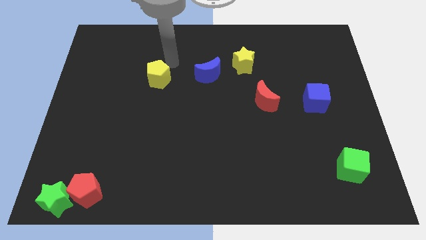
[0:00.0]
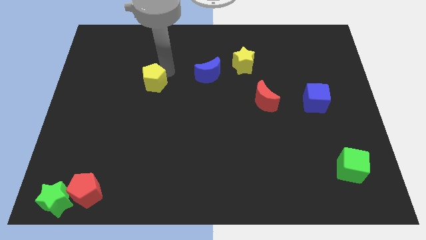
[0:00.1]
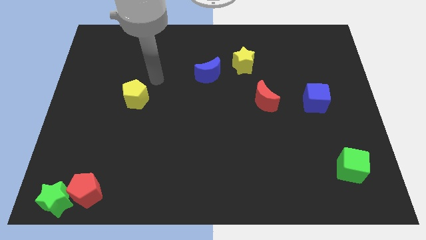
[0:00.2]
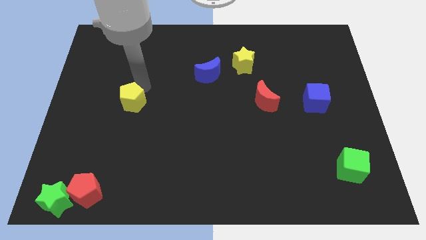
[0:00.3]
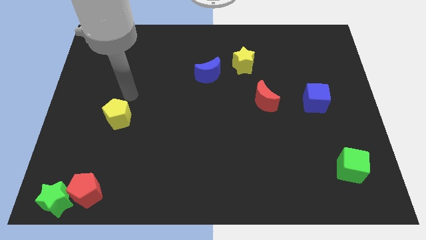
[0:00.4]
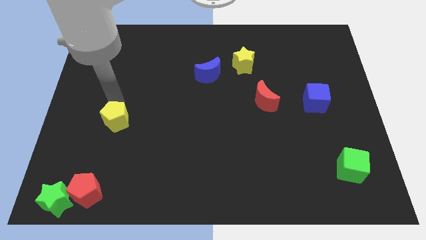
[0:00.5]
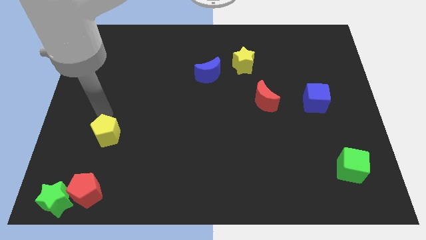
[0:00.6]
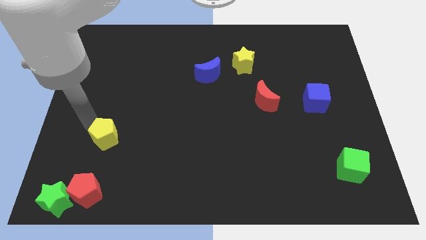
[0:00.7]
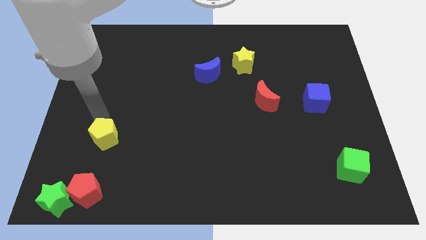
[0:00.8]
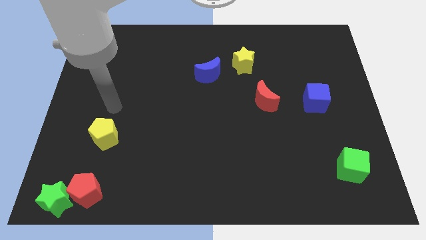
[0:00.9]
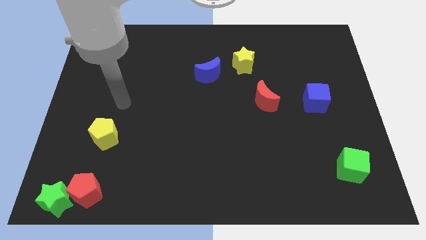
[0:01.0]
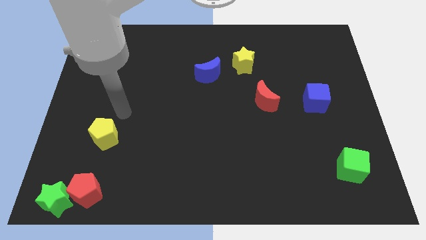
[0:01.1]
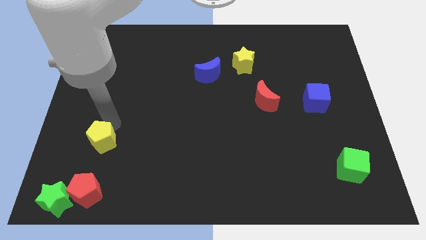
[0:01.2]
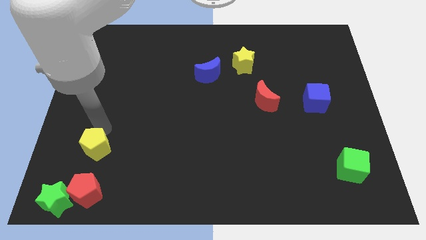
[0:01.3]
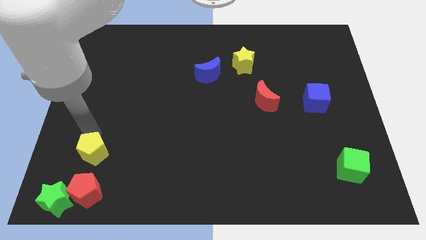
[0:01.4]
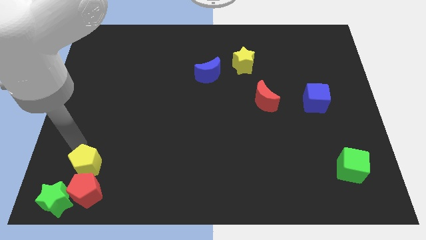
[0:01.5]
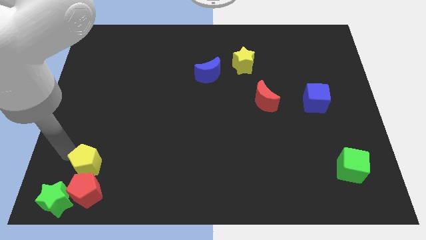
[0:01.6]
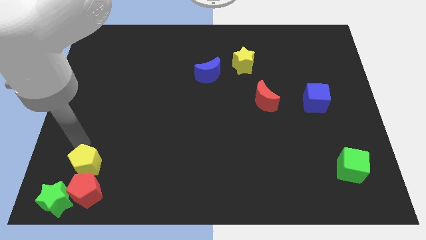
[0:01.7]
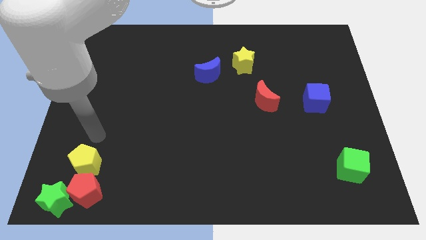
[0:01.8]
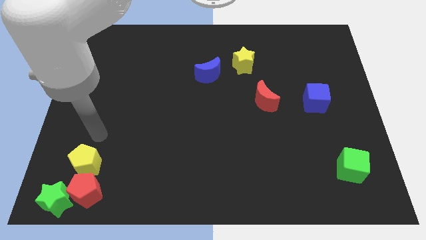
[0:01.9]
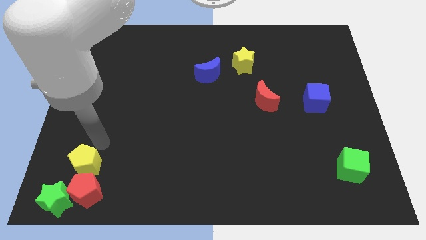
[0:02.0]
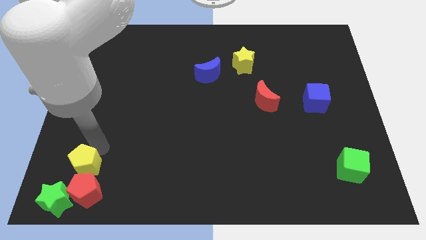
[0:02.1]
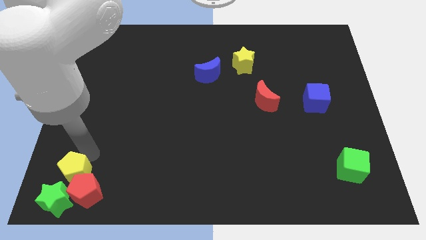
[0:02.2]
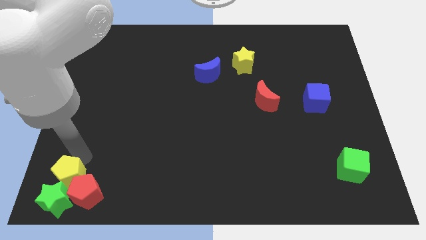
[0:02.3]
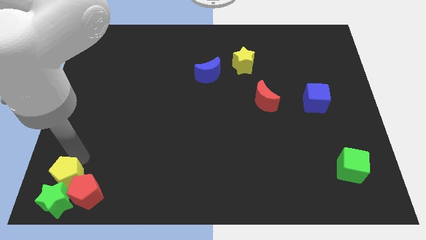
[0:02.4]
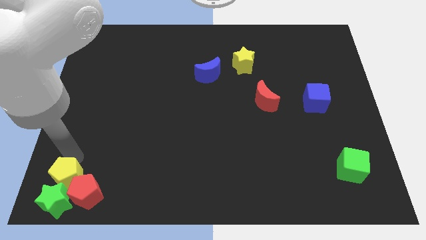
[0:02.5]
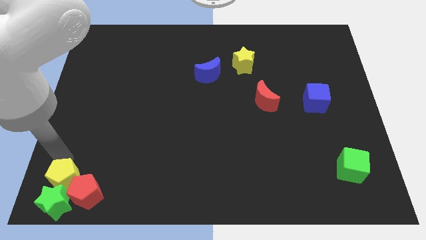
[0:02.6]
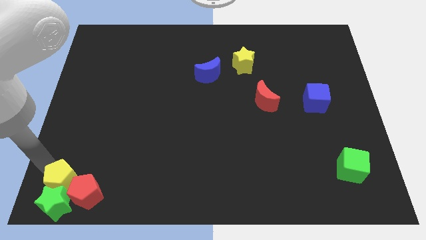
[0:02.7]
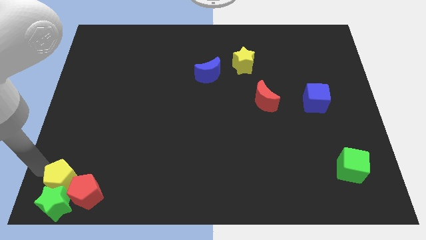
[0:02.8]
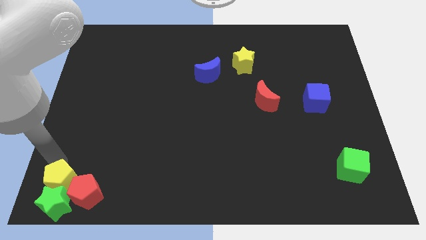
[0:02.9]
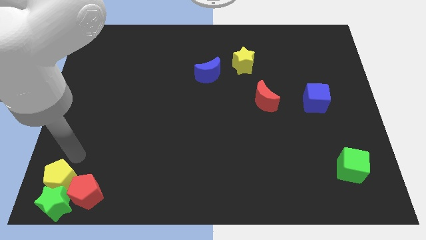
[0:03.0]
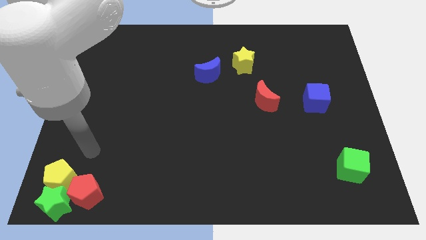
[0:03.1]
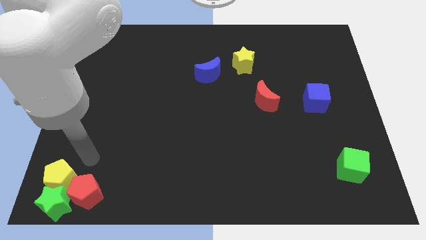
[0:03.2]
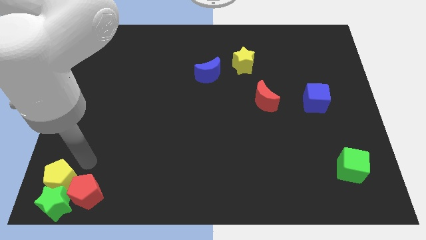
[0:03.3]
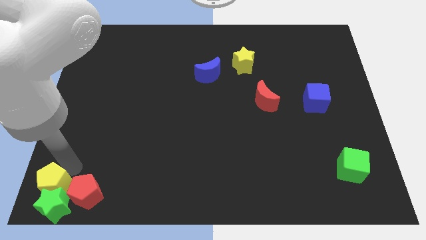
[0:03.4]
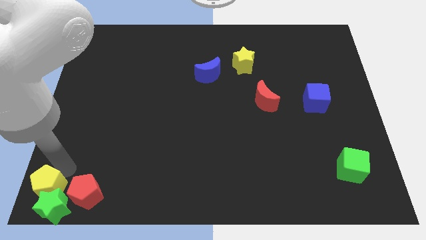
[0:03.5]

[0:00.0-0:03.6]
move the yellow pentagon to a group of blocks

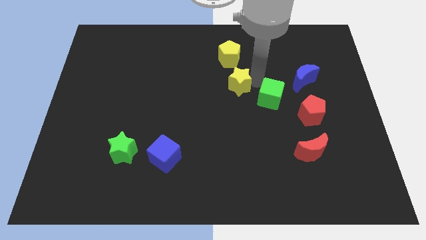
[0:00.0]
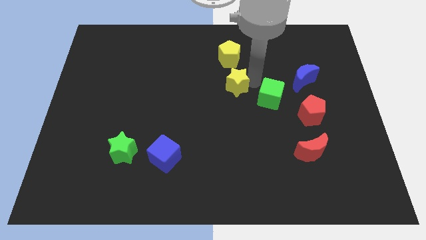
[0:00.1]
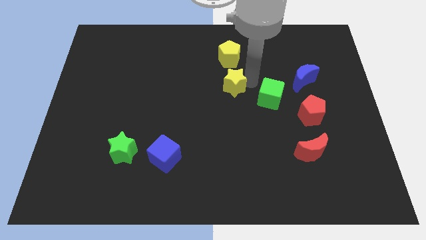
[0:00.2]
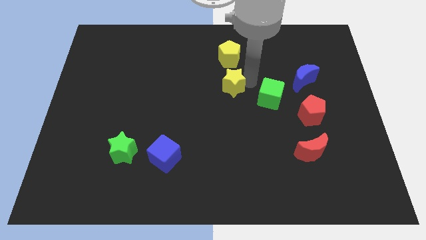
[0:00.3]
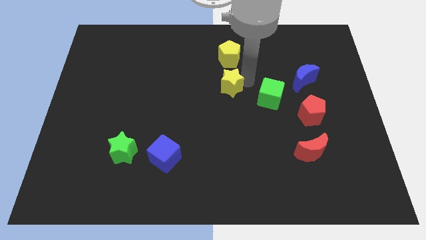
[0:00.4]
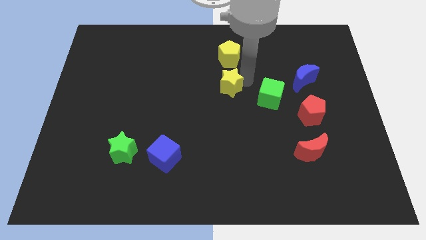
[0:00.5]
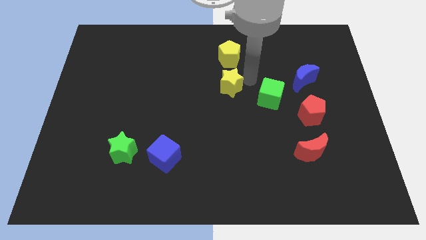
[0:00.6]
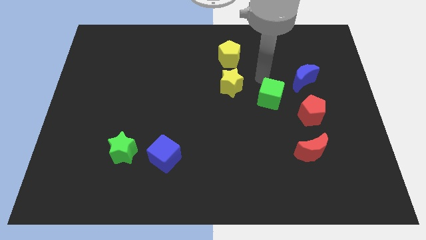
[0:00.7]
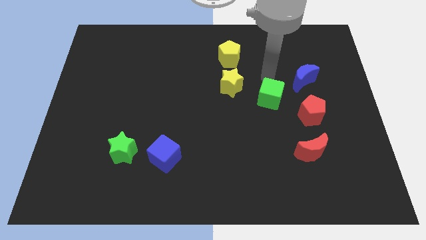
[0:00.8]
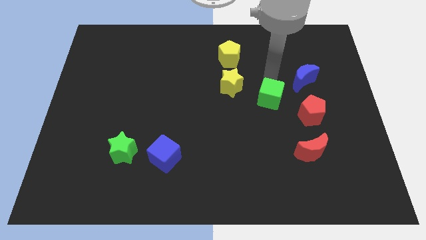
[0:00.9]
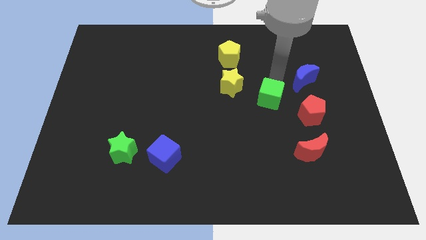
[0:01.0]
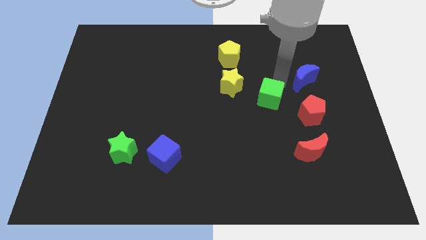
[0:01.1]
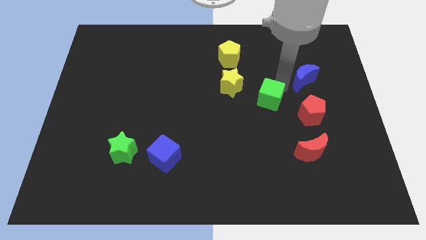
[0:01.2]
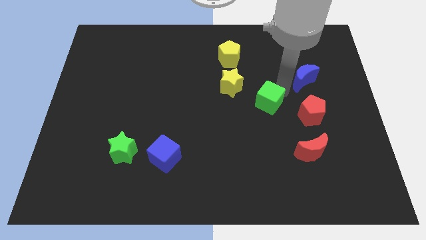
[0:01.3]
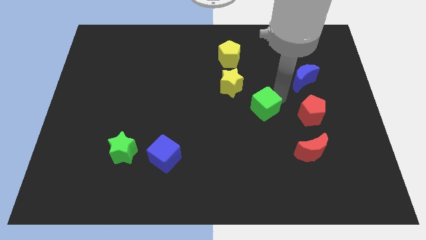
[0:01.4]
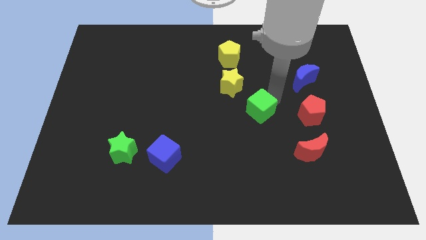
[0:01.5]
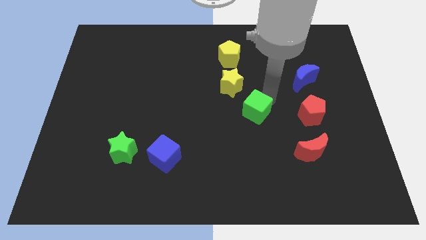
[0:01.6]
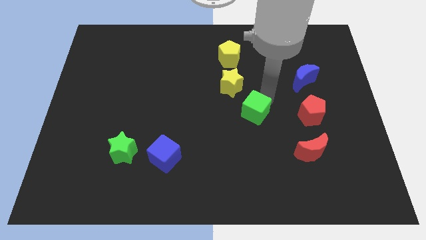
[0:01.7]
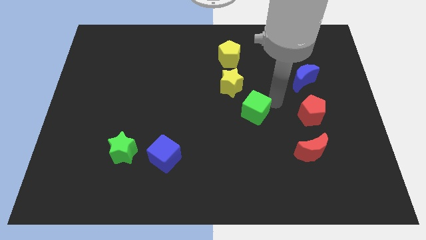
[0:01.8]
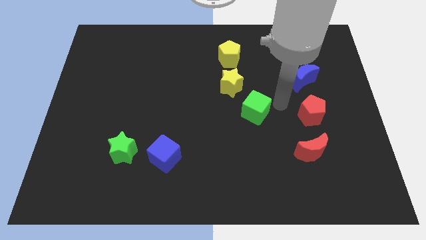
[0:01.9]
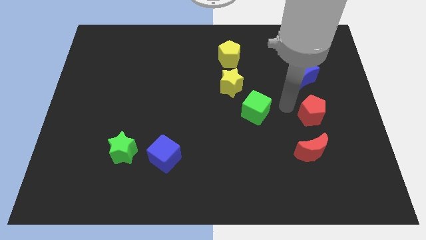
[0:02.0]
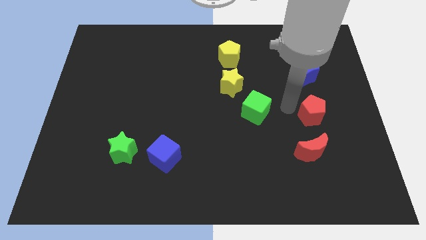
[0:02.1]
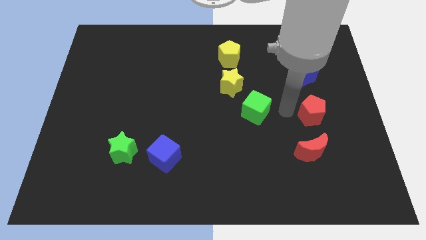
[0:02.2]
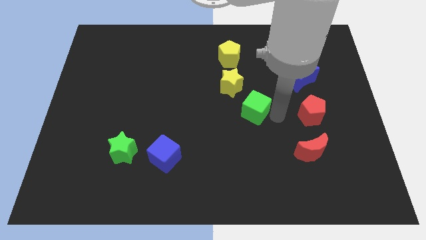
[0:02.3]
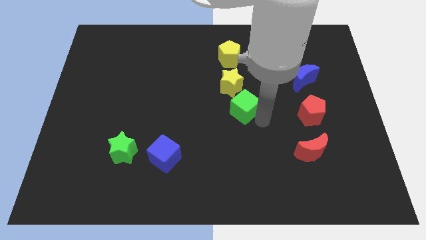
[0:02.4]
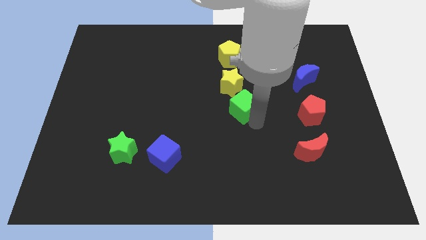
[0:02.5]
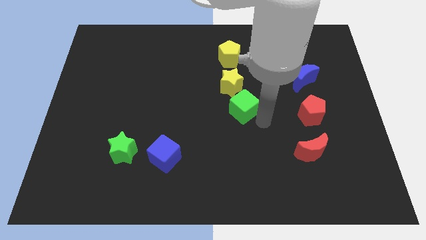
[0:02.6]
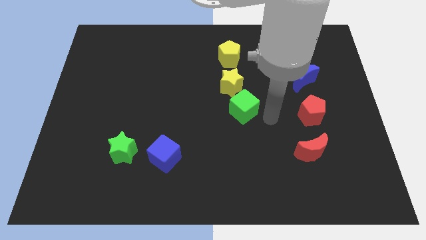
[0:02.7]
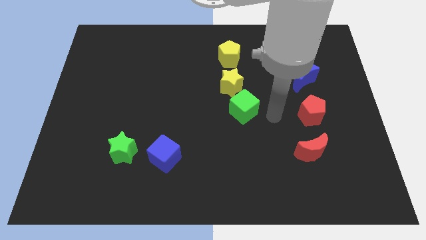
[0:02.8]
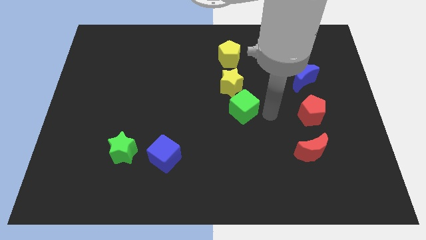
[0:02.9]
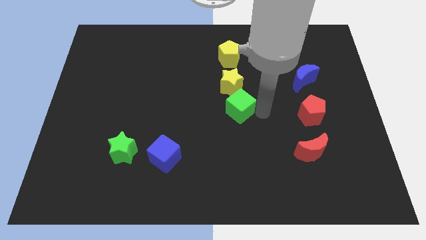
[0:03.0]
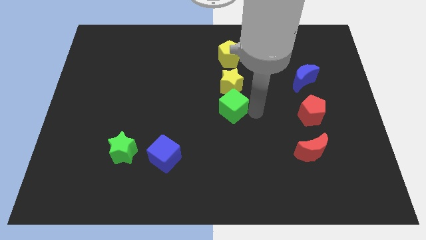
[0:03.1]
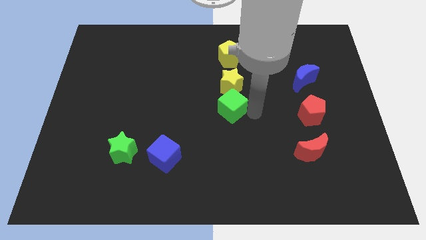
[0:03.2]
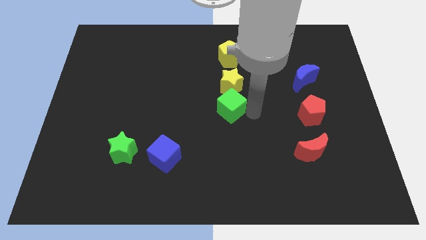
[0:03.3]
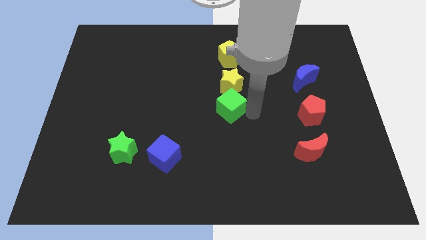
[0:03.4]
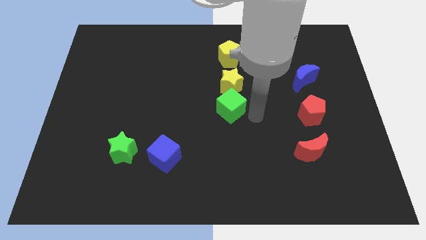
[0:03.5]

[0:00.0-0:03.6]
push the green cube below to the yellow star

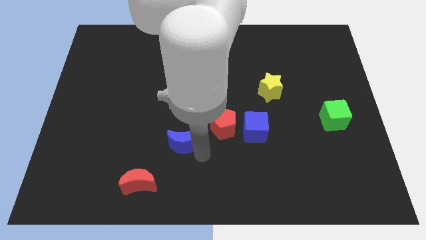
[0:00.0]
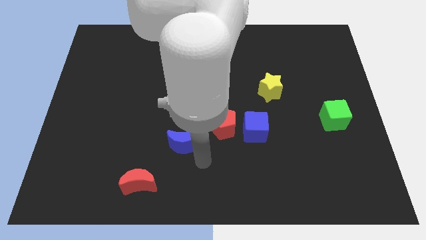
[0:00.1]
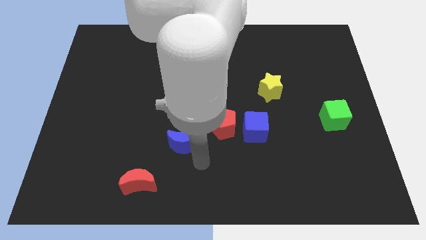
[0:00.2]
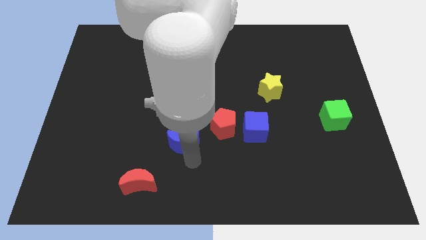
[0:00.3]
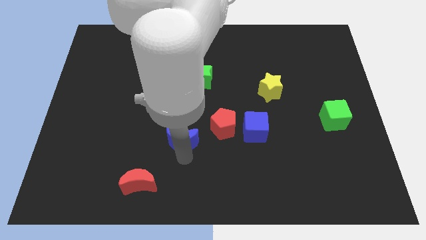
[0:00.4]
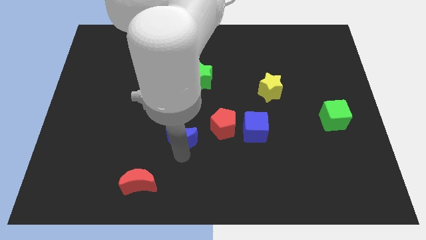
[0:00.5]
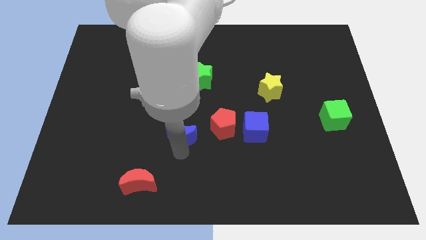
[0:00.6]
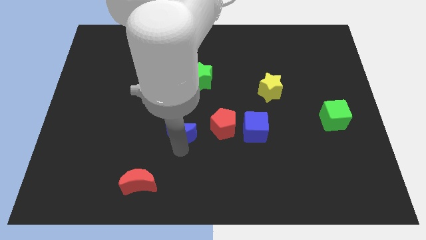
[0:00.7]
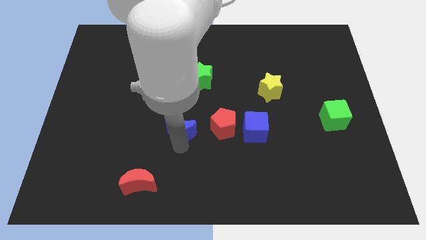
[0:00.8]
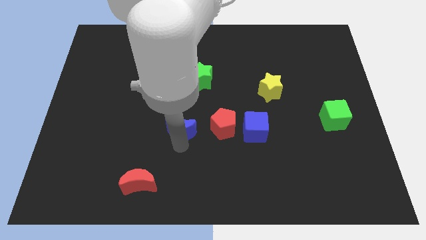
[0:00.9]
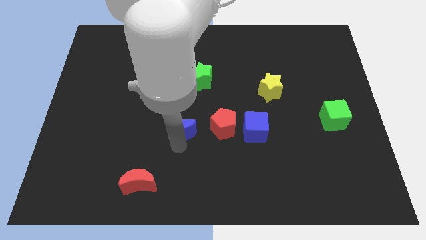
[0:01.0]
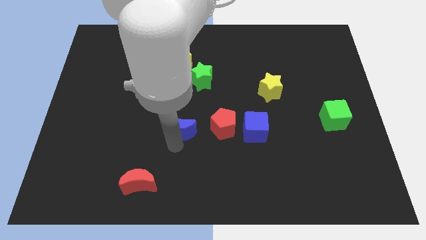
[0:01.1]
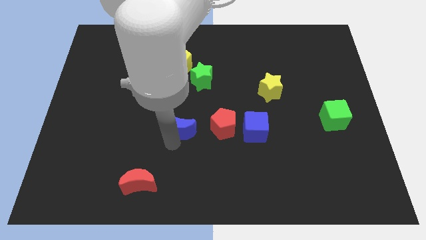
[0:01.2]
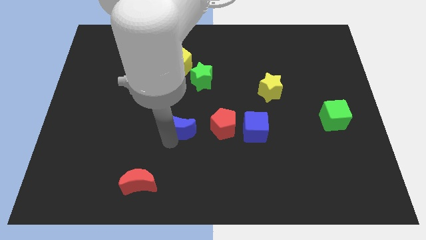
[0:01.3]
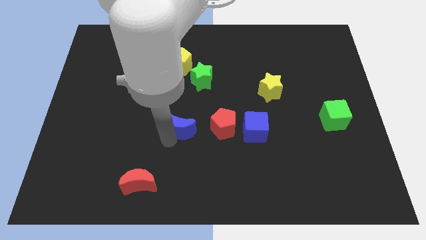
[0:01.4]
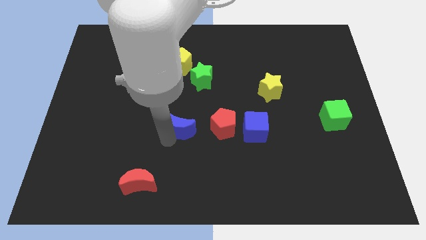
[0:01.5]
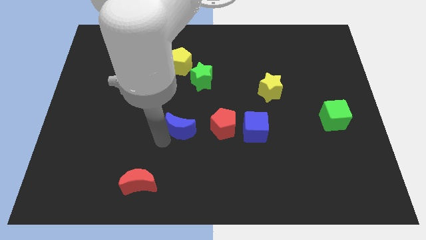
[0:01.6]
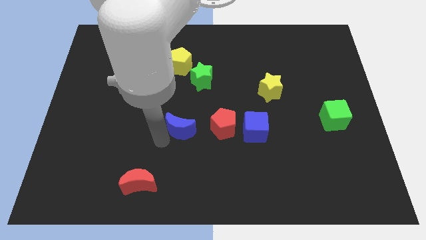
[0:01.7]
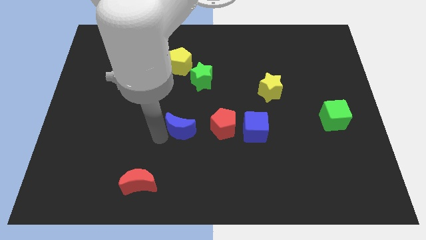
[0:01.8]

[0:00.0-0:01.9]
put the blue crescent to the left of the red pentagon
